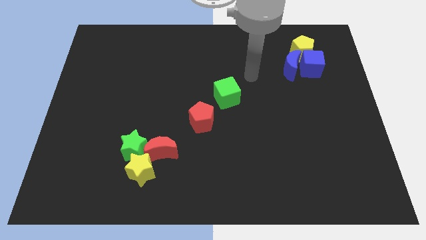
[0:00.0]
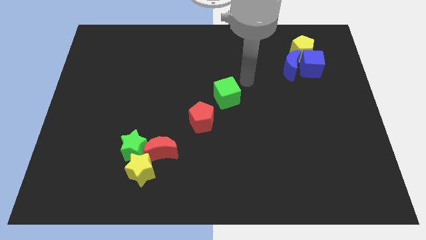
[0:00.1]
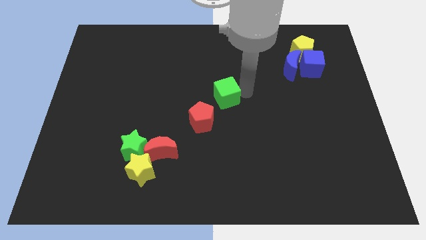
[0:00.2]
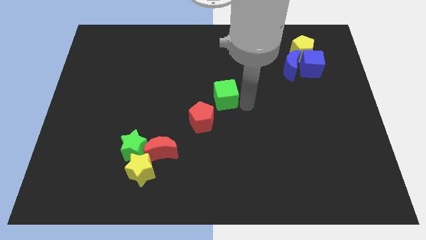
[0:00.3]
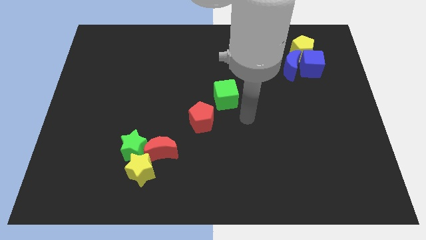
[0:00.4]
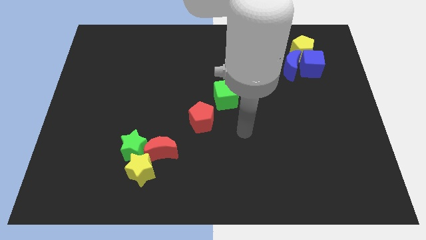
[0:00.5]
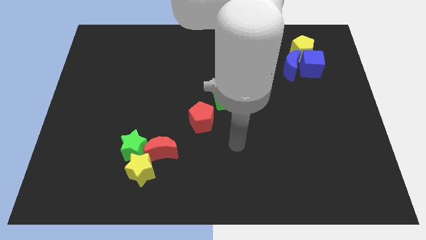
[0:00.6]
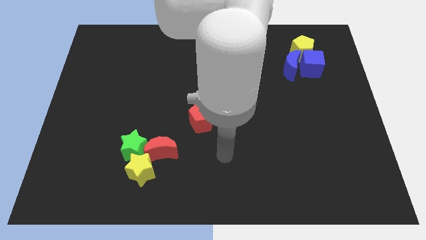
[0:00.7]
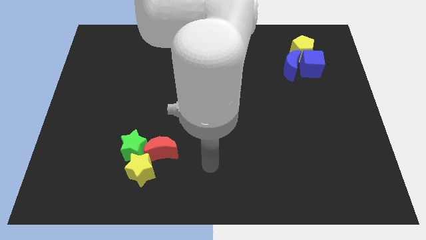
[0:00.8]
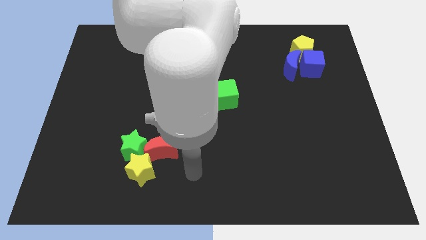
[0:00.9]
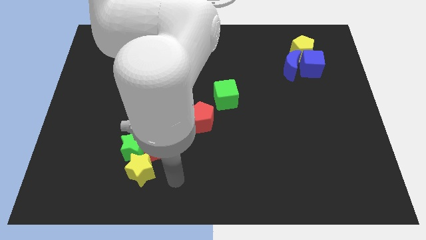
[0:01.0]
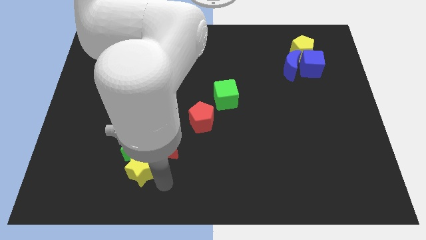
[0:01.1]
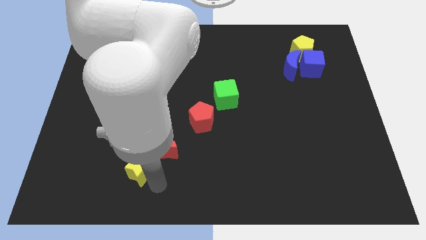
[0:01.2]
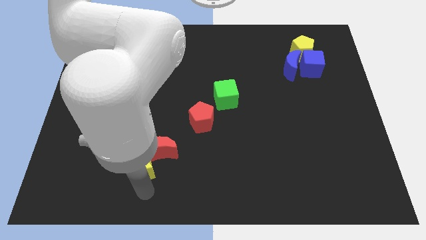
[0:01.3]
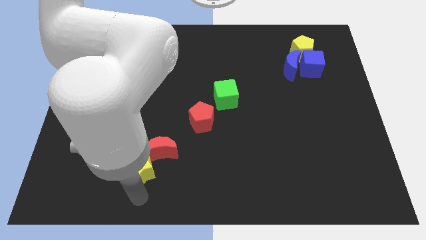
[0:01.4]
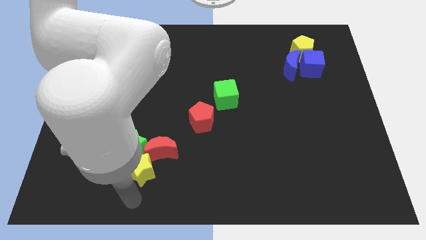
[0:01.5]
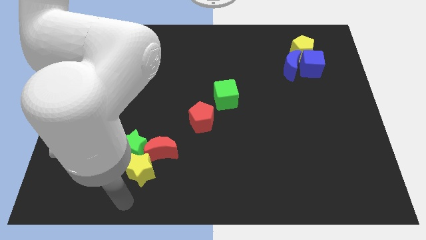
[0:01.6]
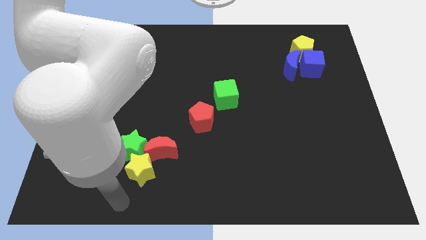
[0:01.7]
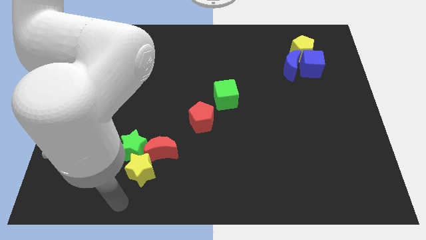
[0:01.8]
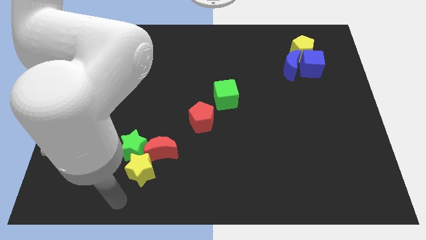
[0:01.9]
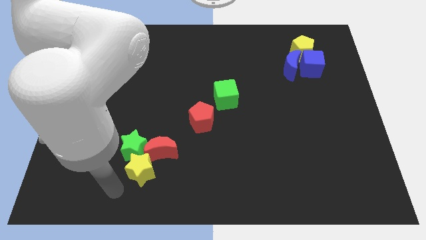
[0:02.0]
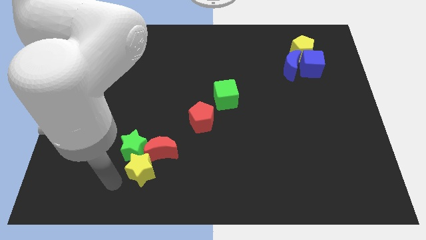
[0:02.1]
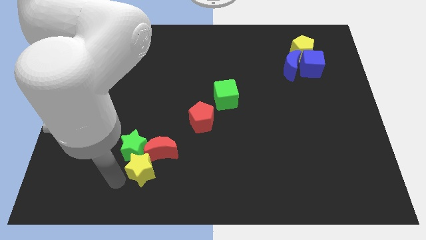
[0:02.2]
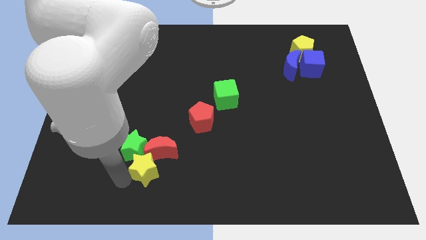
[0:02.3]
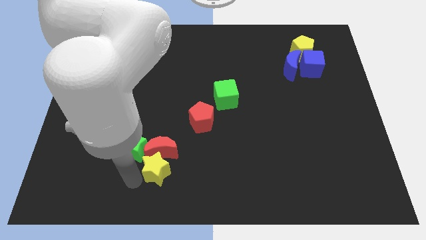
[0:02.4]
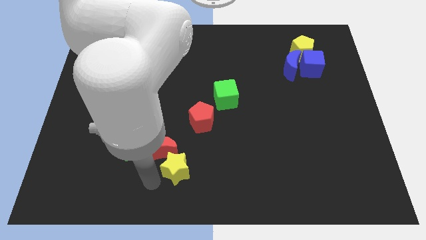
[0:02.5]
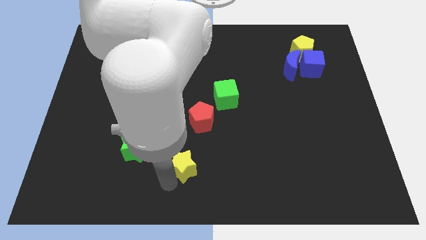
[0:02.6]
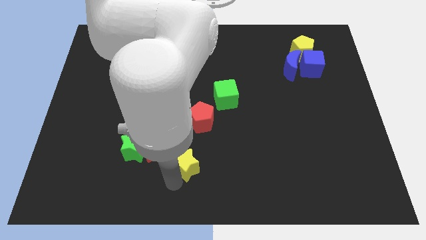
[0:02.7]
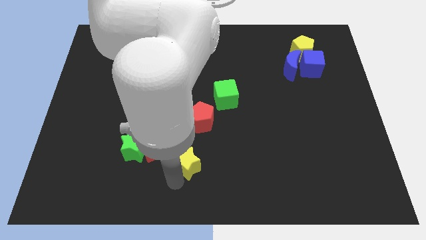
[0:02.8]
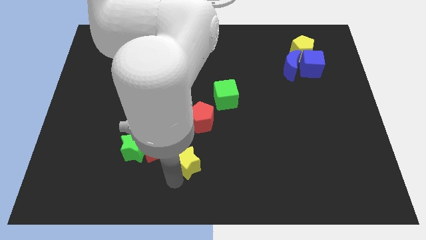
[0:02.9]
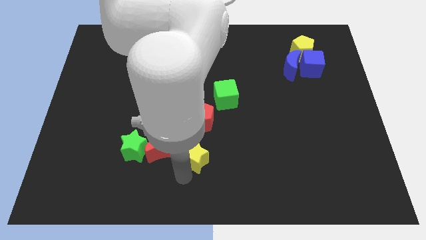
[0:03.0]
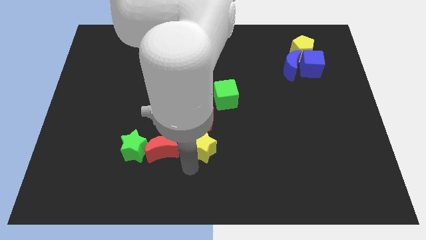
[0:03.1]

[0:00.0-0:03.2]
move the yellow star to the bottom of the red pentagon

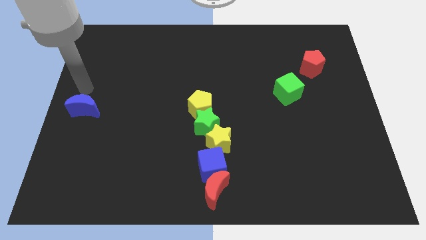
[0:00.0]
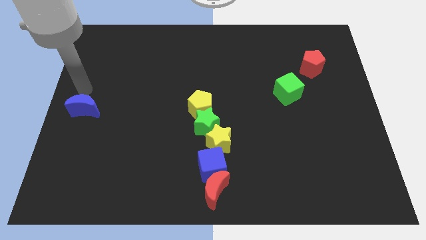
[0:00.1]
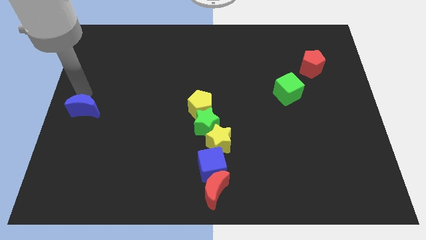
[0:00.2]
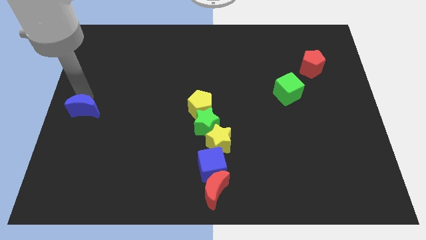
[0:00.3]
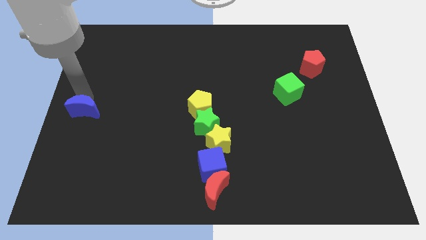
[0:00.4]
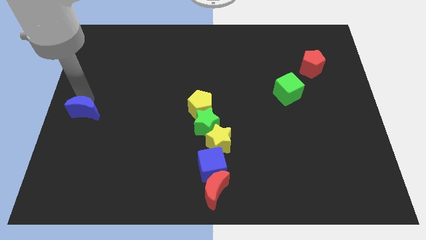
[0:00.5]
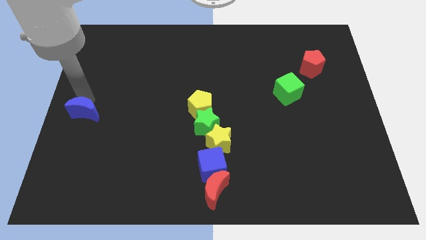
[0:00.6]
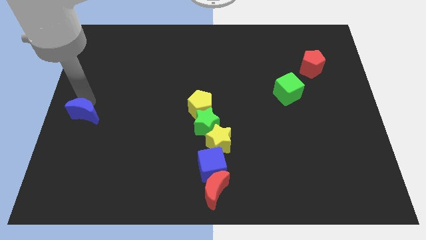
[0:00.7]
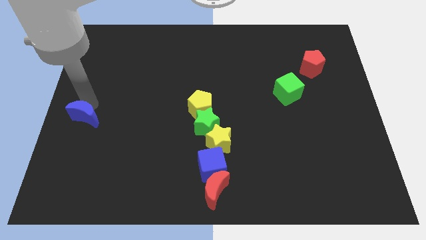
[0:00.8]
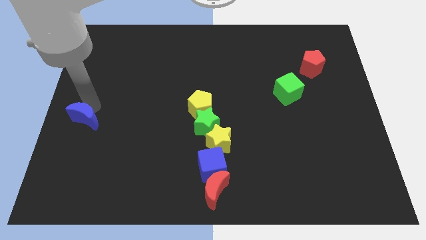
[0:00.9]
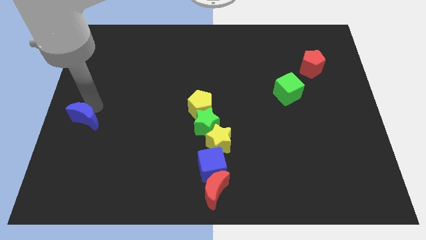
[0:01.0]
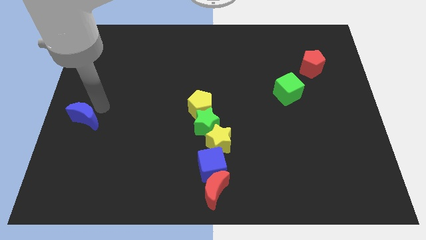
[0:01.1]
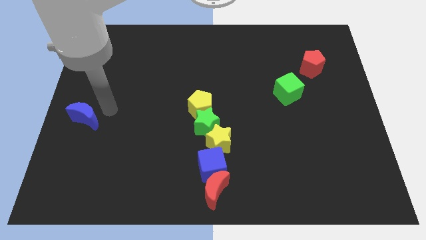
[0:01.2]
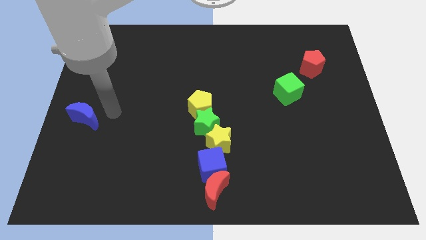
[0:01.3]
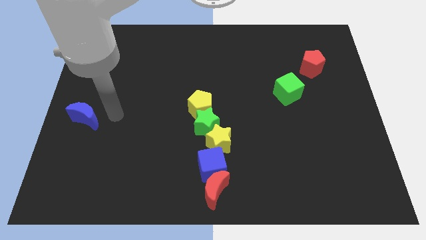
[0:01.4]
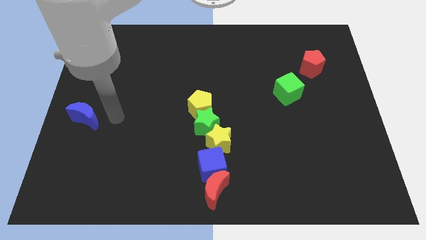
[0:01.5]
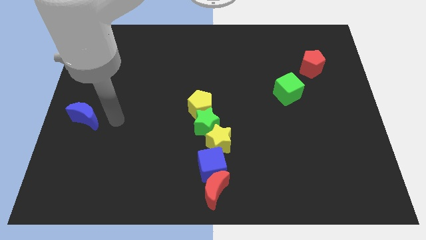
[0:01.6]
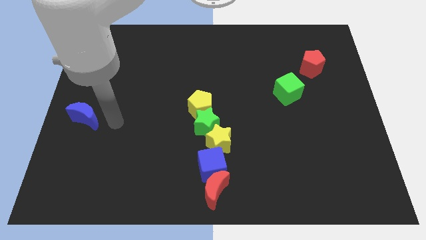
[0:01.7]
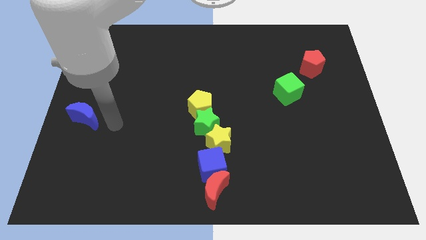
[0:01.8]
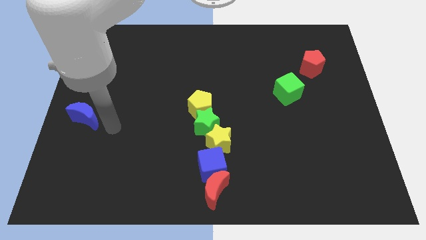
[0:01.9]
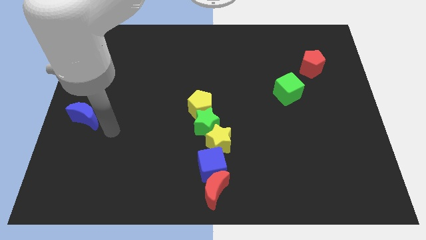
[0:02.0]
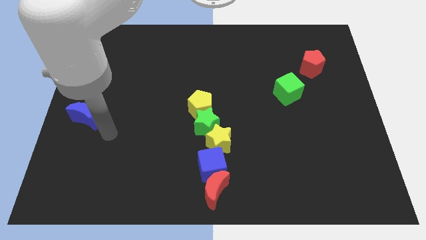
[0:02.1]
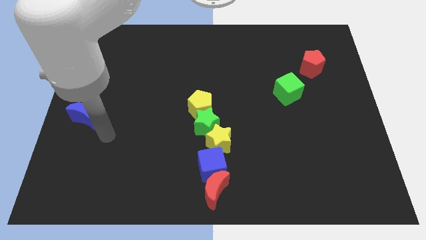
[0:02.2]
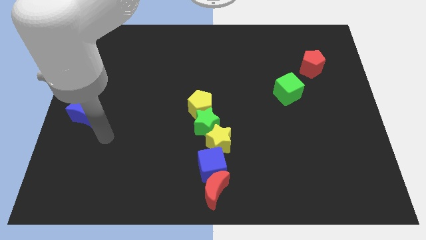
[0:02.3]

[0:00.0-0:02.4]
push blue moon slightly downwards

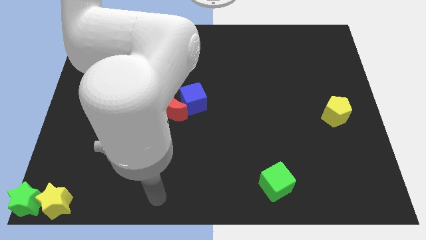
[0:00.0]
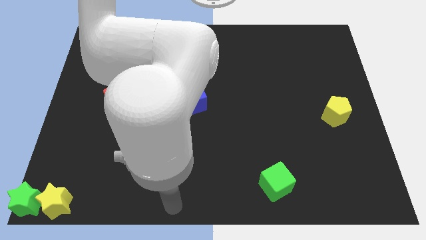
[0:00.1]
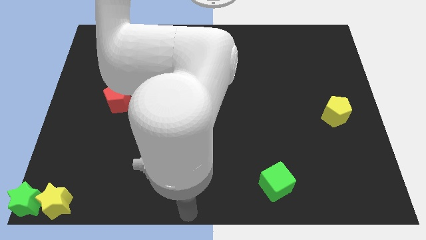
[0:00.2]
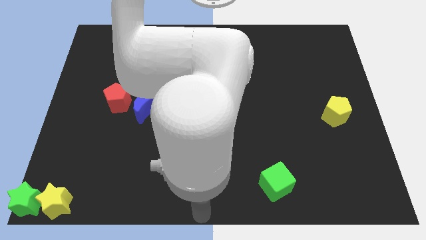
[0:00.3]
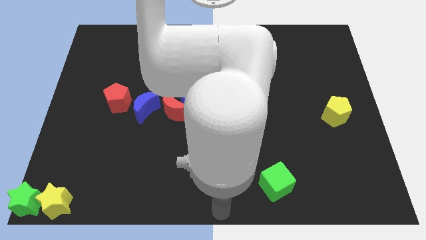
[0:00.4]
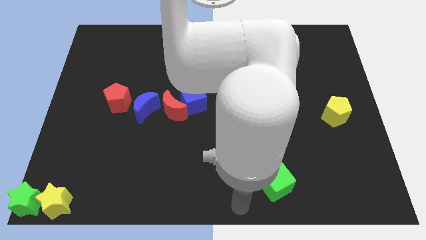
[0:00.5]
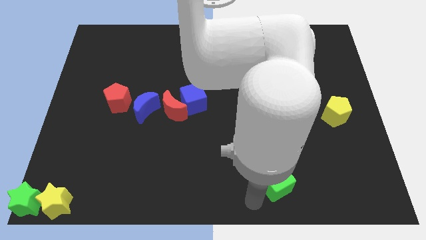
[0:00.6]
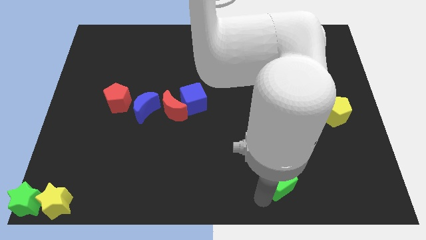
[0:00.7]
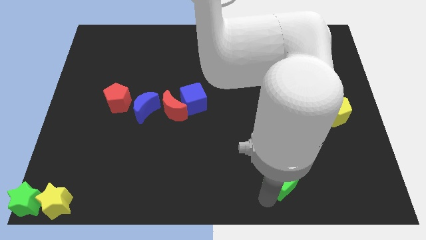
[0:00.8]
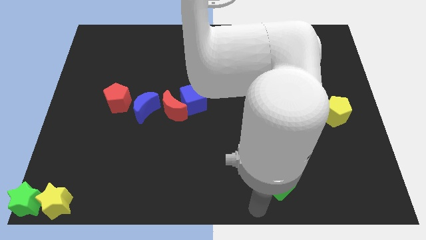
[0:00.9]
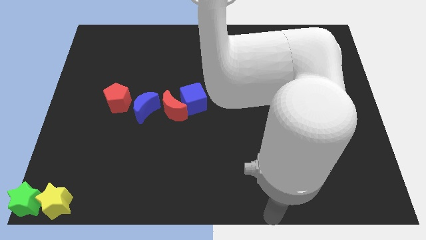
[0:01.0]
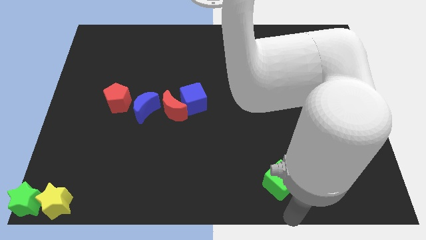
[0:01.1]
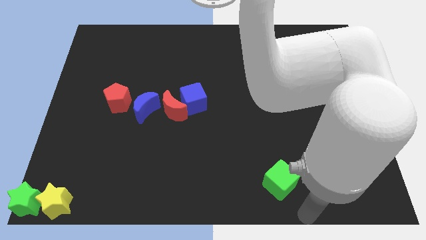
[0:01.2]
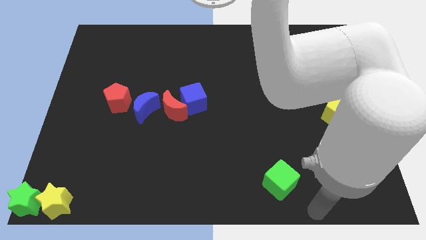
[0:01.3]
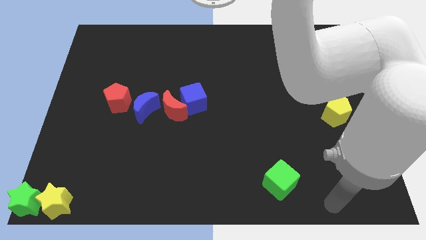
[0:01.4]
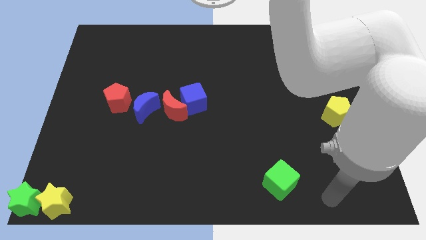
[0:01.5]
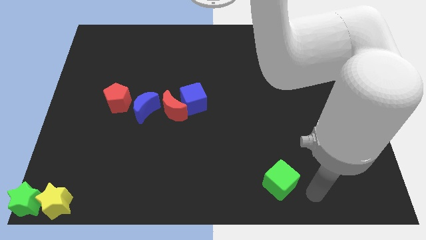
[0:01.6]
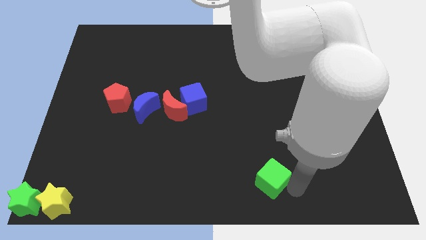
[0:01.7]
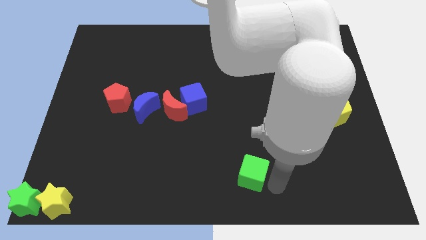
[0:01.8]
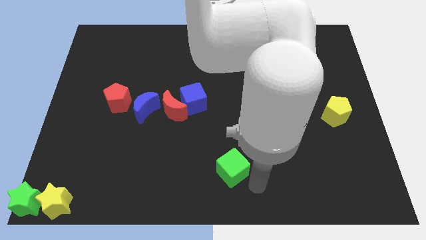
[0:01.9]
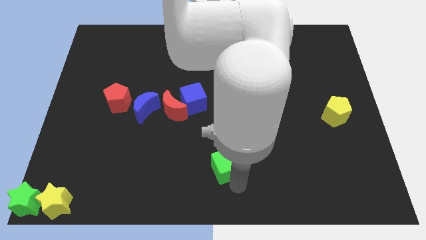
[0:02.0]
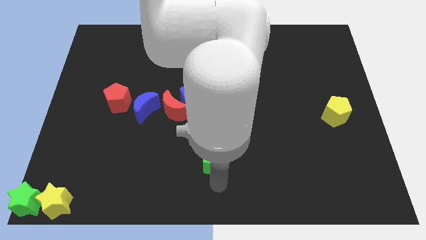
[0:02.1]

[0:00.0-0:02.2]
place the green cube parallel to the bottom center

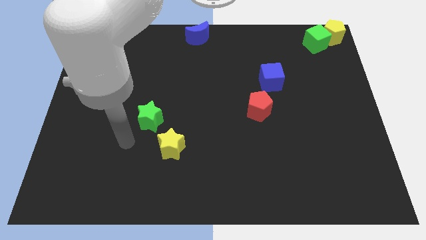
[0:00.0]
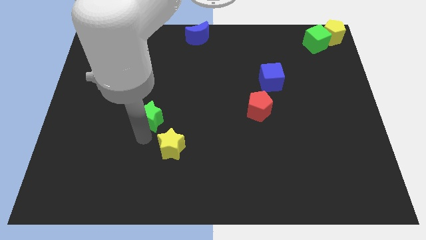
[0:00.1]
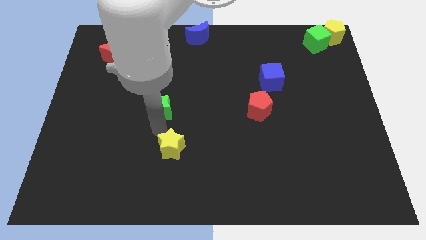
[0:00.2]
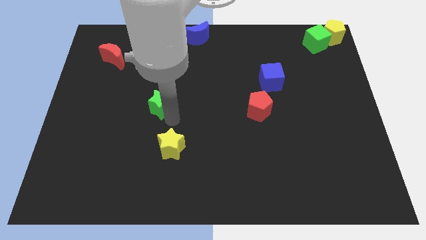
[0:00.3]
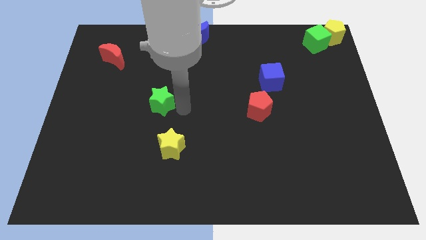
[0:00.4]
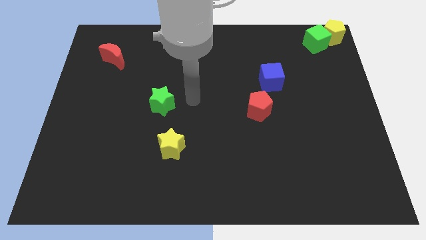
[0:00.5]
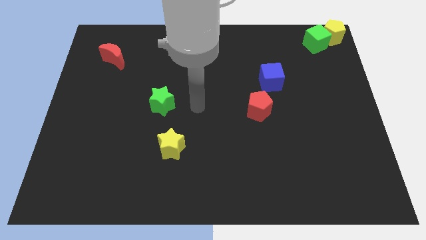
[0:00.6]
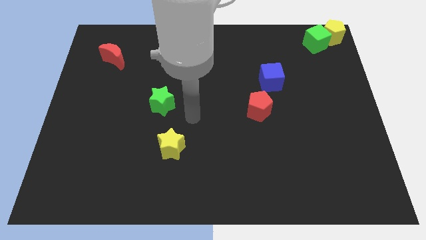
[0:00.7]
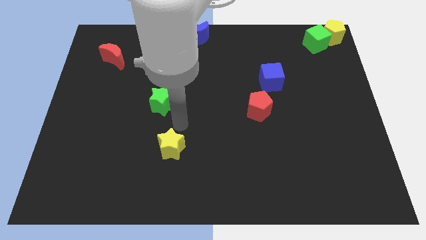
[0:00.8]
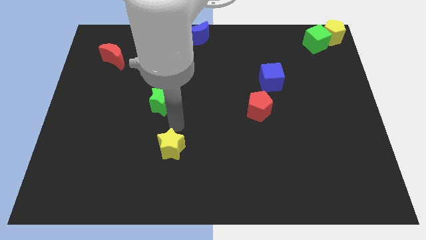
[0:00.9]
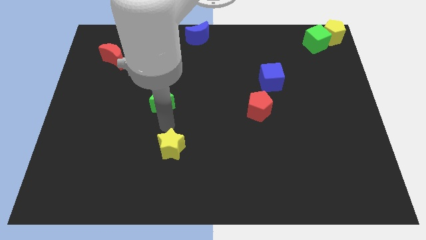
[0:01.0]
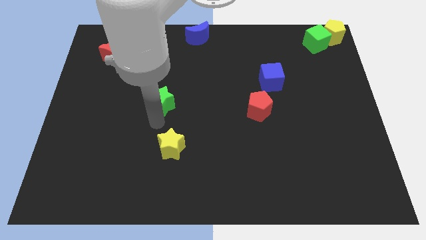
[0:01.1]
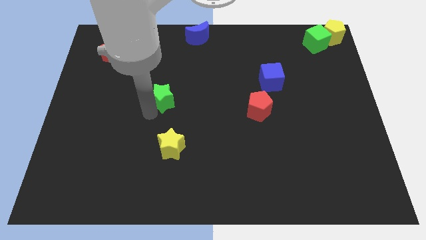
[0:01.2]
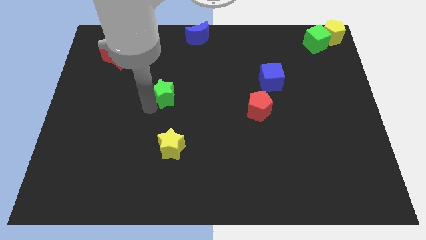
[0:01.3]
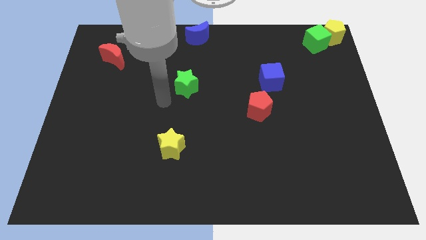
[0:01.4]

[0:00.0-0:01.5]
move the green star diagonally to the blue crescent
